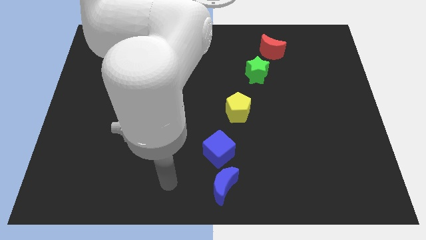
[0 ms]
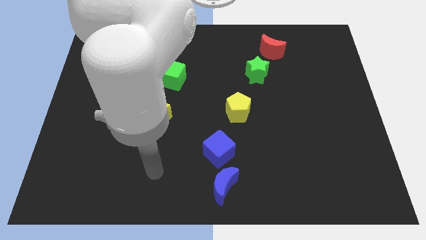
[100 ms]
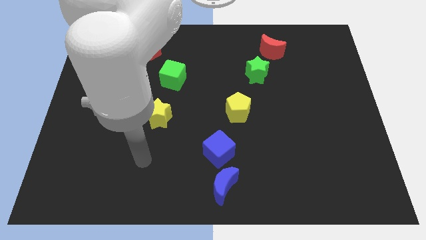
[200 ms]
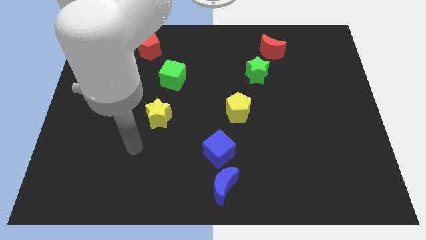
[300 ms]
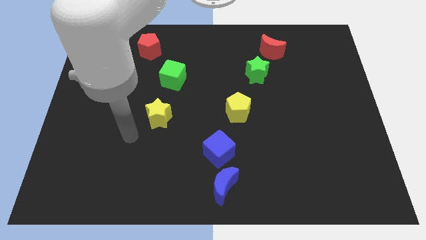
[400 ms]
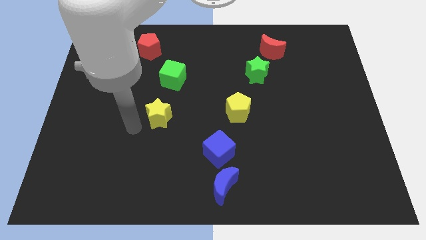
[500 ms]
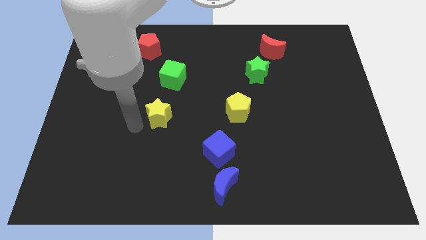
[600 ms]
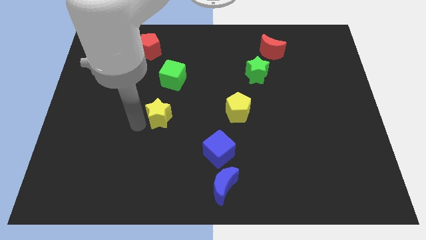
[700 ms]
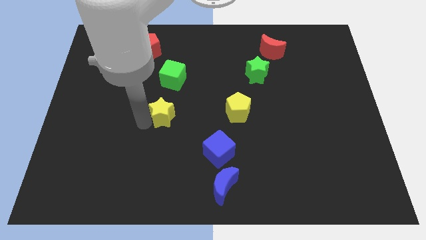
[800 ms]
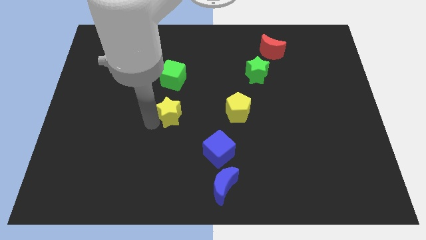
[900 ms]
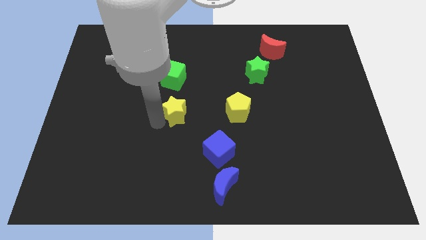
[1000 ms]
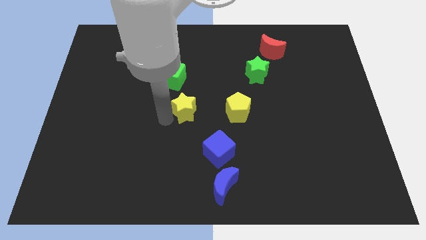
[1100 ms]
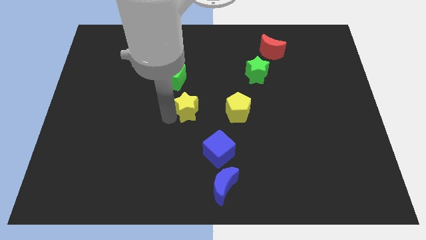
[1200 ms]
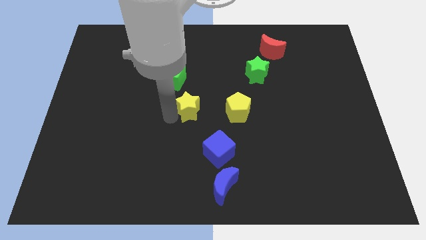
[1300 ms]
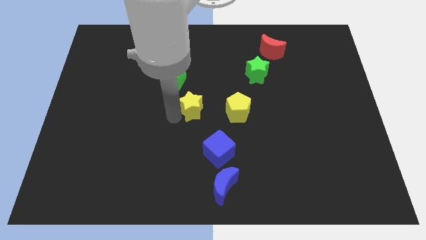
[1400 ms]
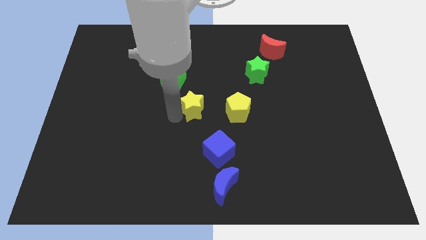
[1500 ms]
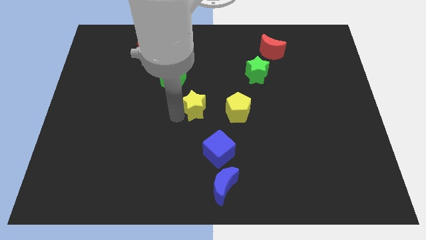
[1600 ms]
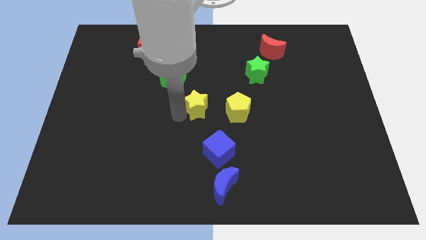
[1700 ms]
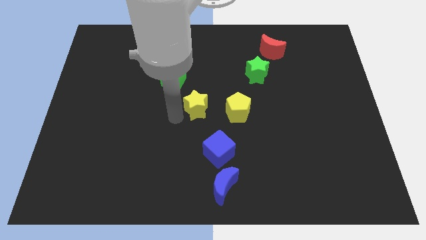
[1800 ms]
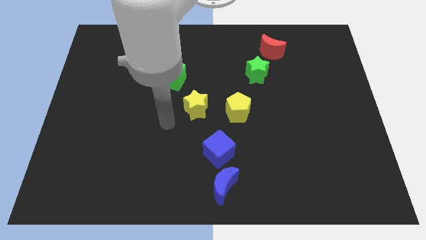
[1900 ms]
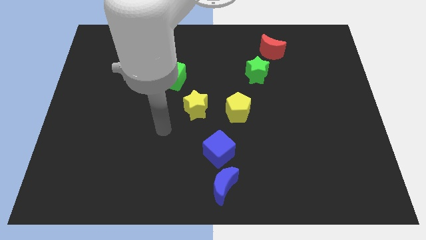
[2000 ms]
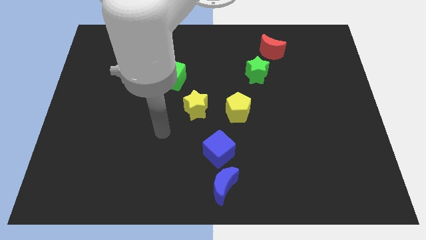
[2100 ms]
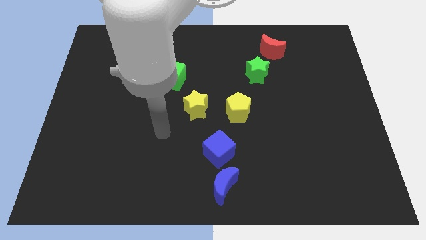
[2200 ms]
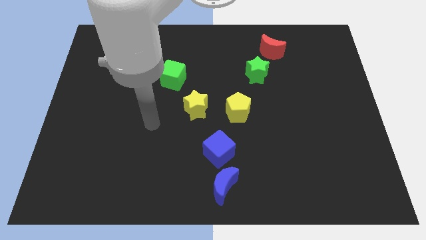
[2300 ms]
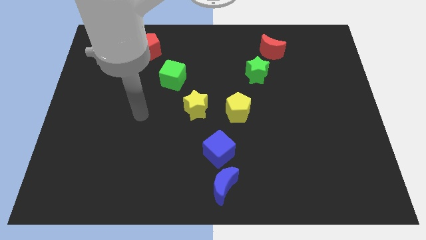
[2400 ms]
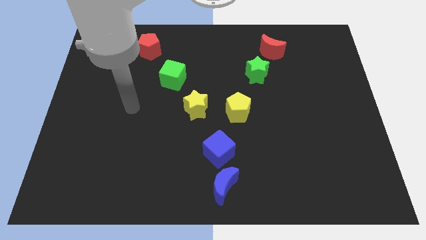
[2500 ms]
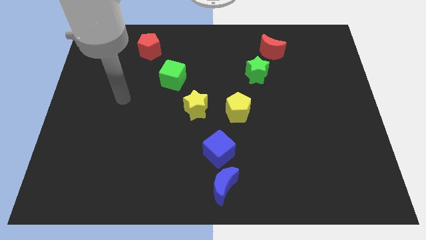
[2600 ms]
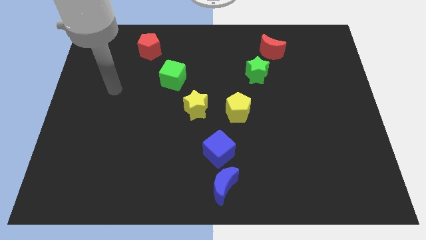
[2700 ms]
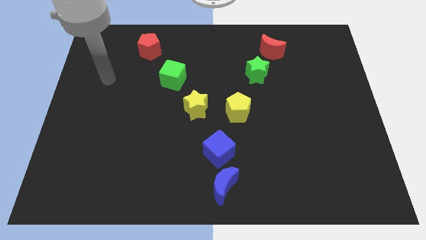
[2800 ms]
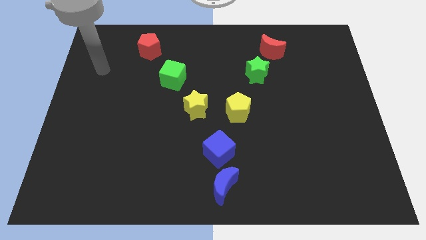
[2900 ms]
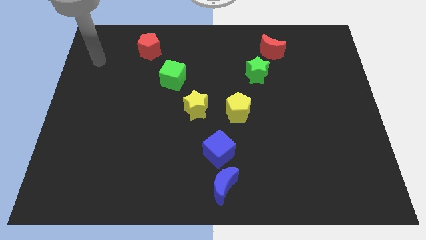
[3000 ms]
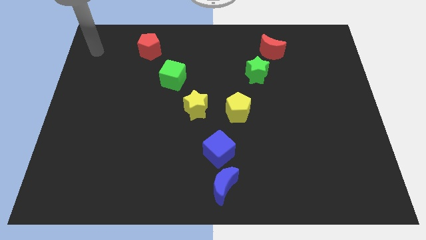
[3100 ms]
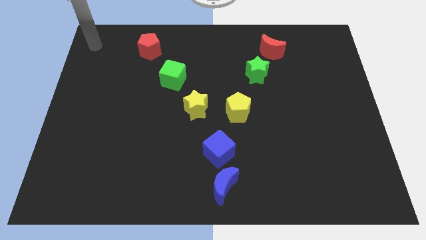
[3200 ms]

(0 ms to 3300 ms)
place yellow star to the center of the board

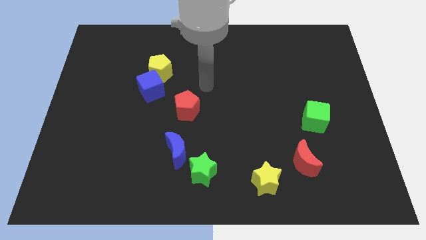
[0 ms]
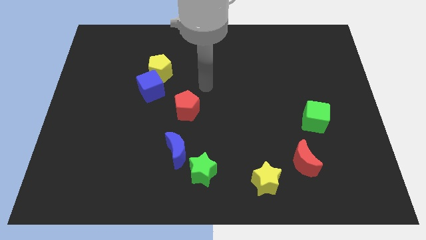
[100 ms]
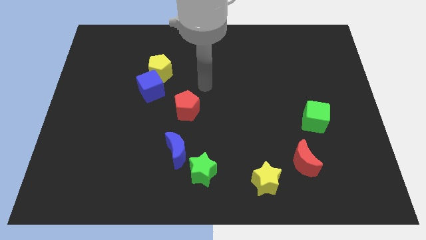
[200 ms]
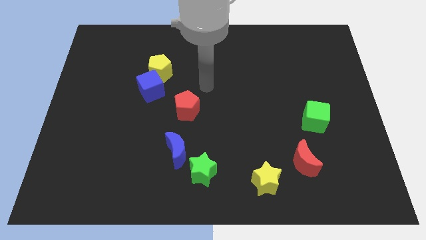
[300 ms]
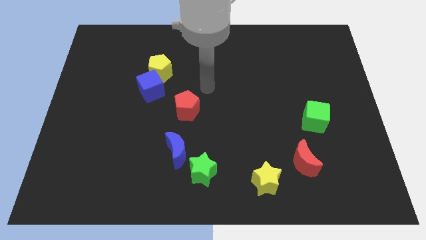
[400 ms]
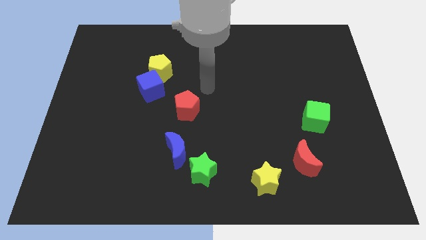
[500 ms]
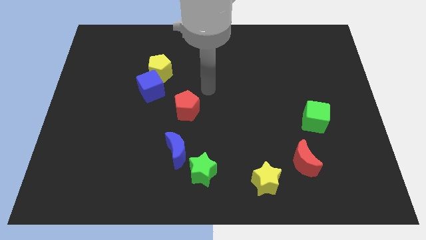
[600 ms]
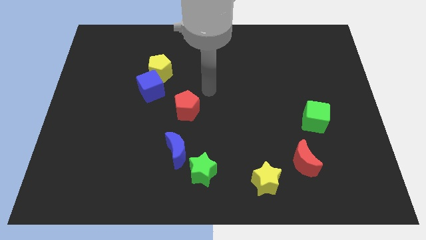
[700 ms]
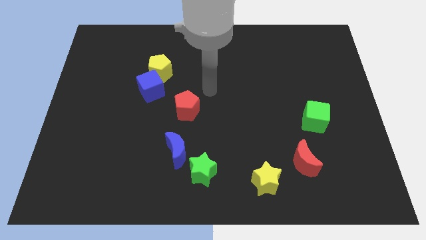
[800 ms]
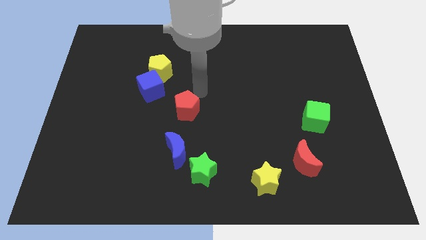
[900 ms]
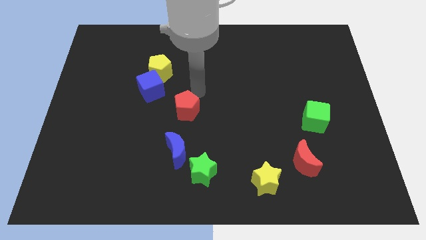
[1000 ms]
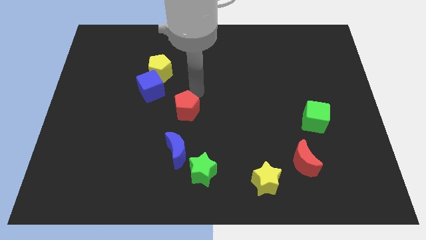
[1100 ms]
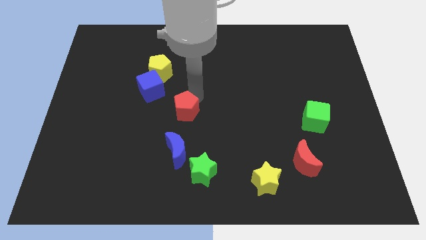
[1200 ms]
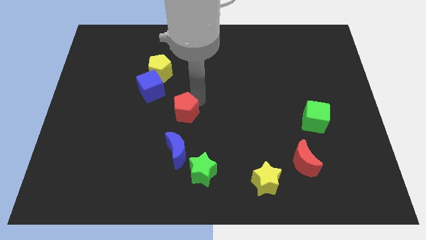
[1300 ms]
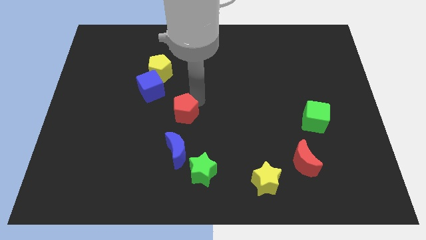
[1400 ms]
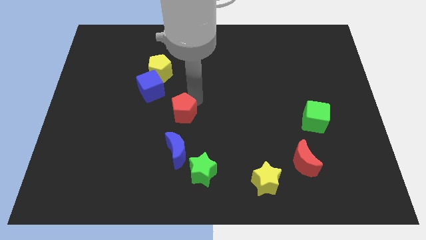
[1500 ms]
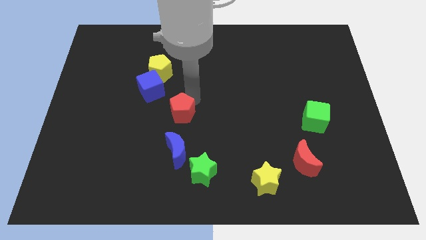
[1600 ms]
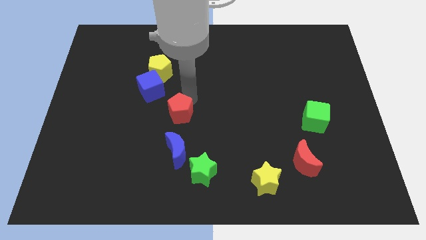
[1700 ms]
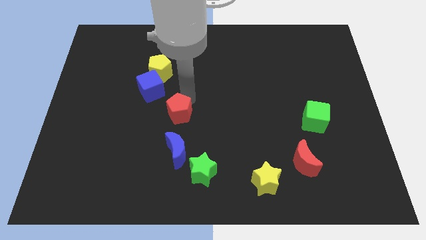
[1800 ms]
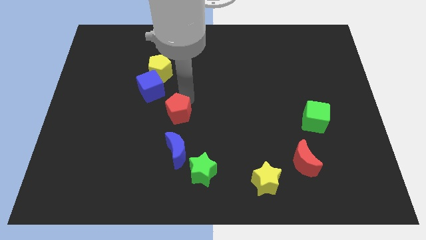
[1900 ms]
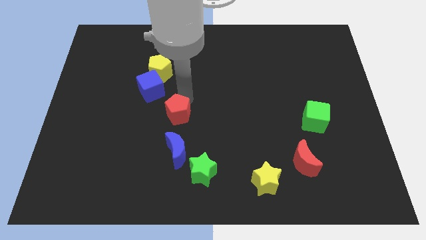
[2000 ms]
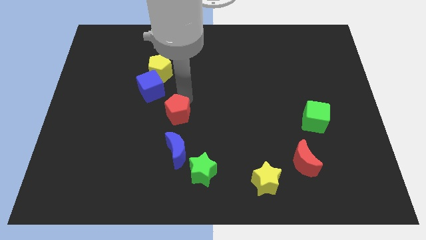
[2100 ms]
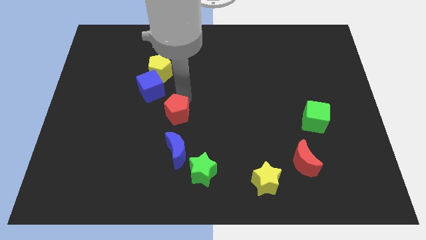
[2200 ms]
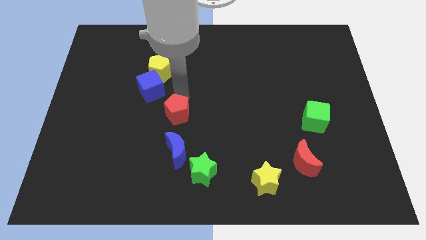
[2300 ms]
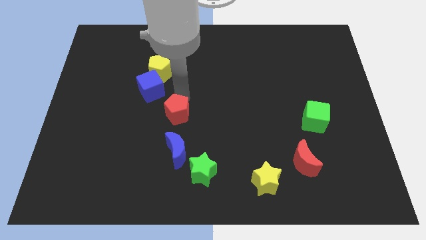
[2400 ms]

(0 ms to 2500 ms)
move the arm into the red pentagon

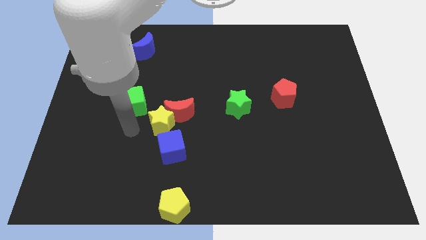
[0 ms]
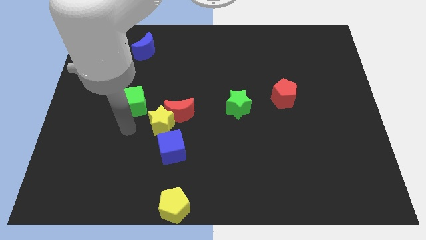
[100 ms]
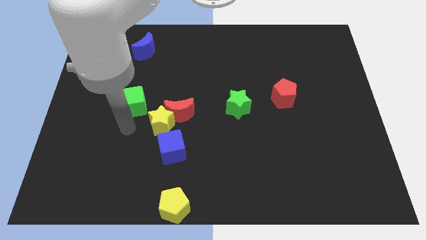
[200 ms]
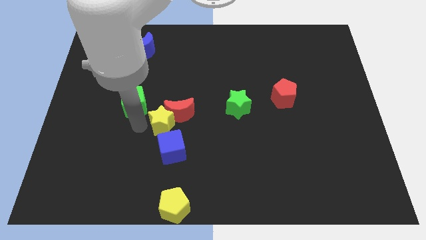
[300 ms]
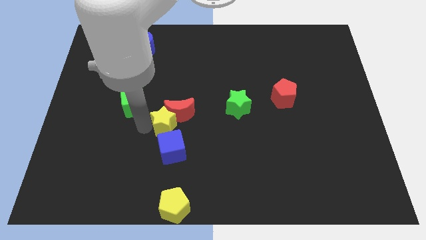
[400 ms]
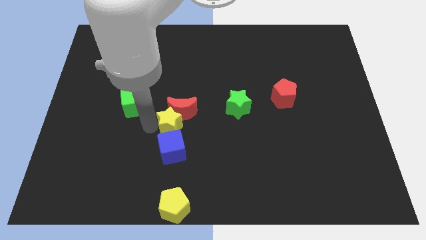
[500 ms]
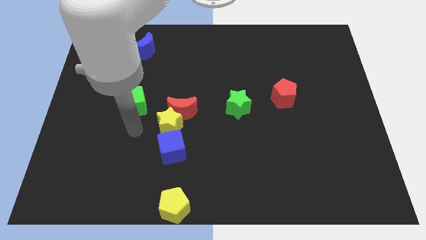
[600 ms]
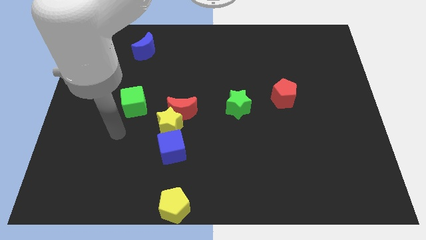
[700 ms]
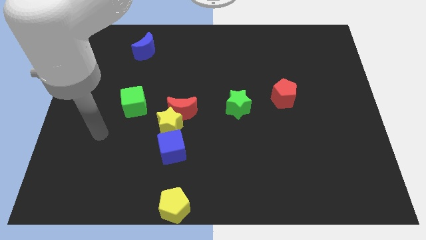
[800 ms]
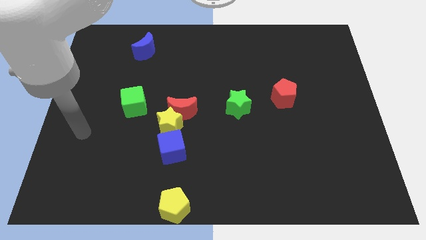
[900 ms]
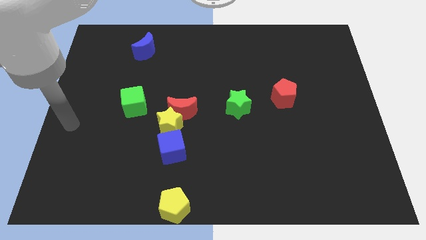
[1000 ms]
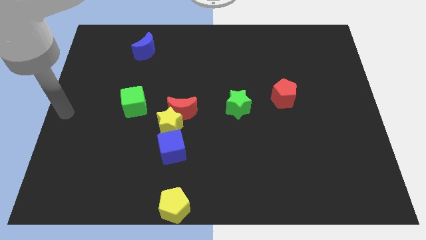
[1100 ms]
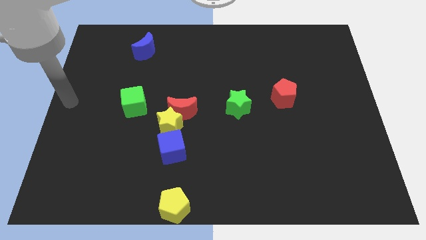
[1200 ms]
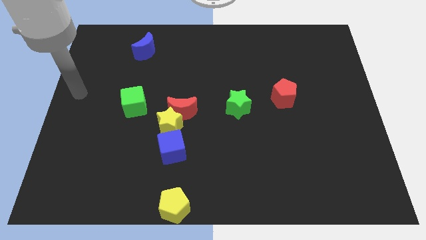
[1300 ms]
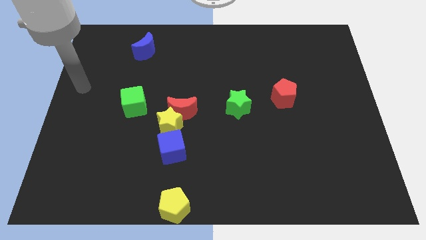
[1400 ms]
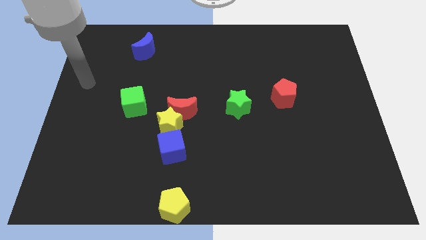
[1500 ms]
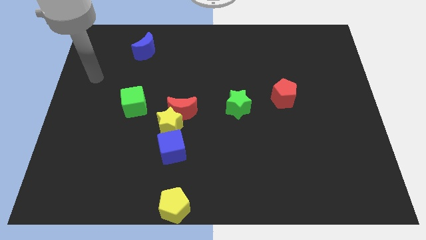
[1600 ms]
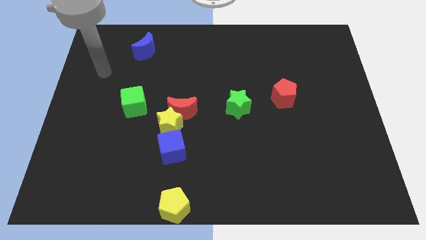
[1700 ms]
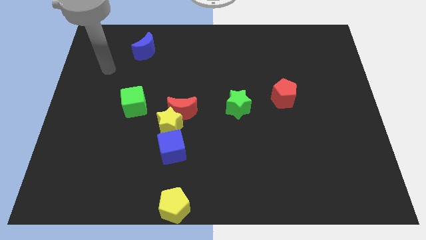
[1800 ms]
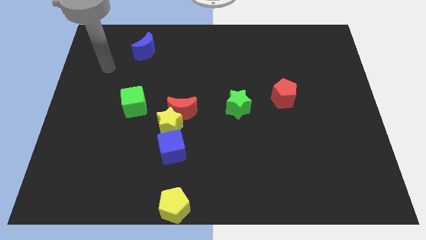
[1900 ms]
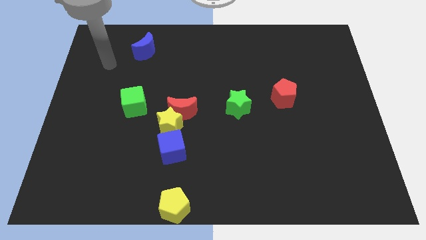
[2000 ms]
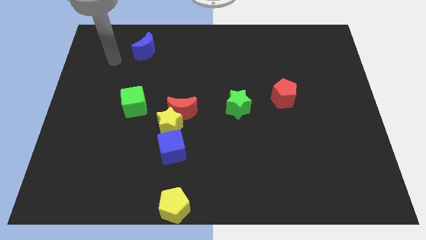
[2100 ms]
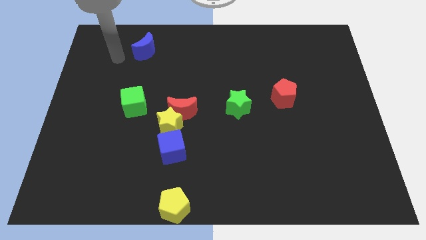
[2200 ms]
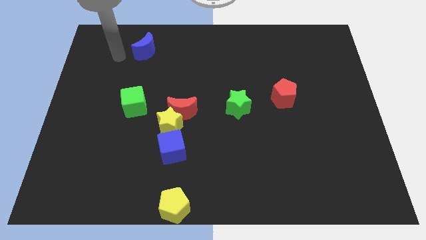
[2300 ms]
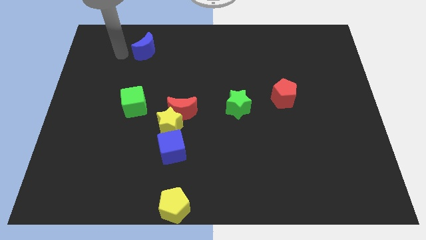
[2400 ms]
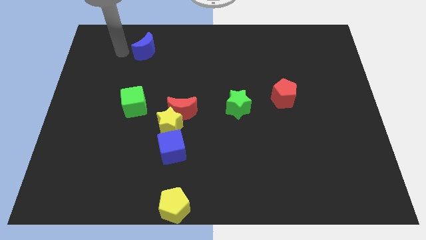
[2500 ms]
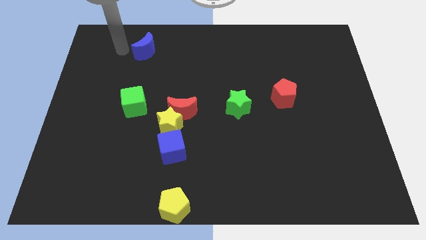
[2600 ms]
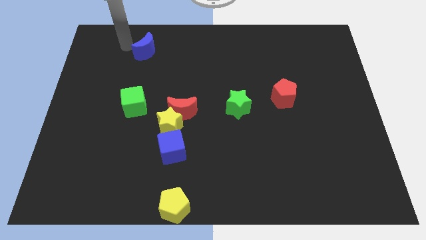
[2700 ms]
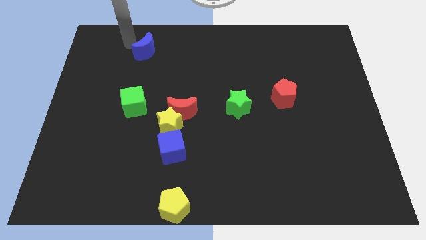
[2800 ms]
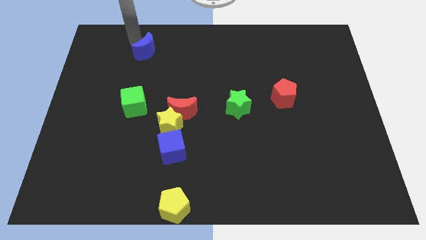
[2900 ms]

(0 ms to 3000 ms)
place the arm near the blue moon

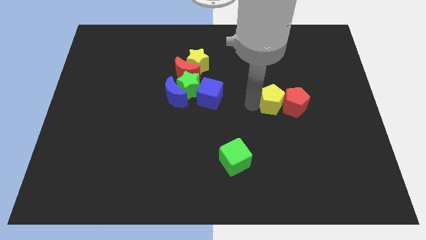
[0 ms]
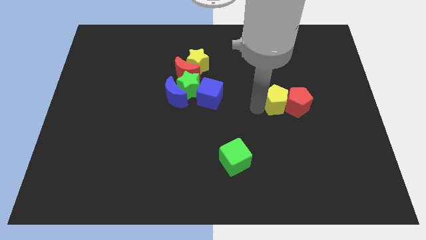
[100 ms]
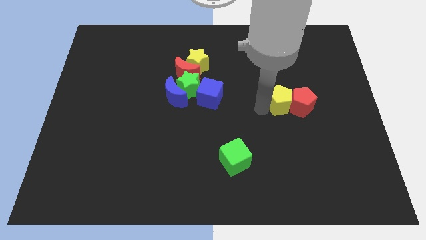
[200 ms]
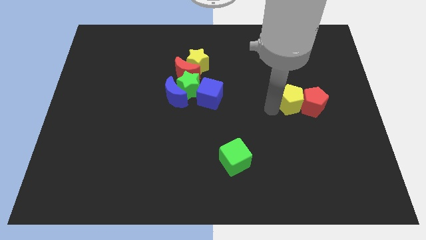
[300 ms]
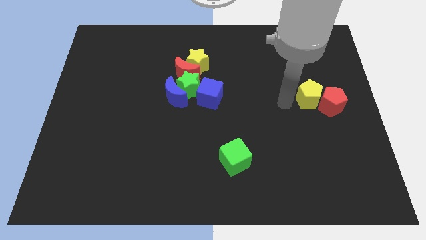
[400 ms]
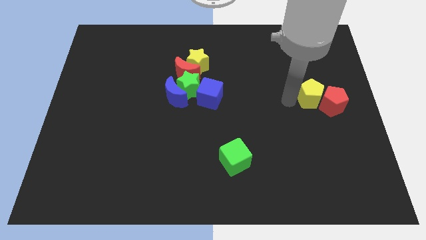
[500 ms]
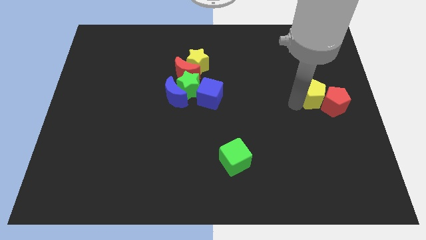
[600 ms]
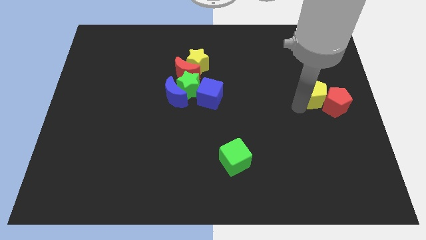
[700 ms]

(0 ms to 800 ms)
push the yellow pentagon and red pentagon to the center right
